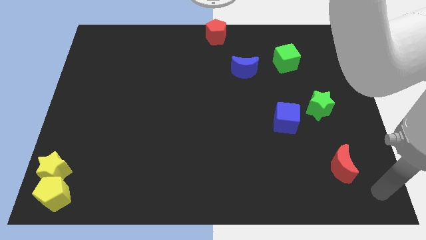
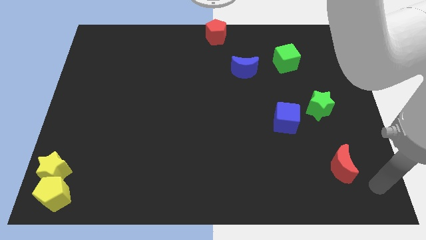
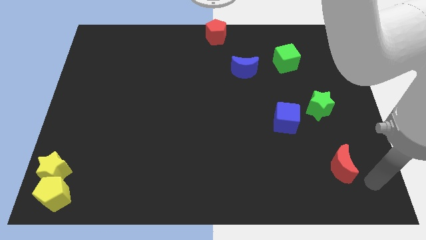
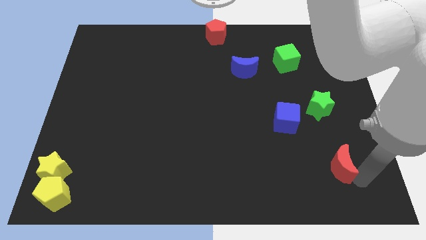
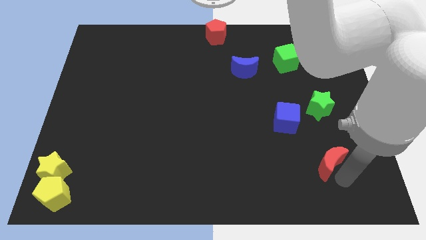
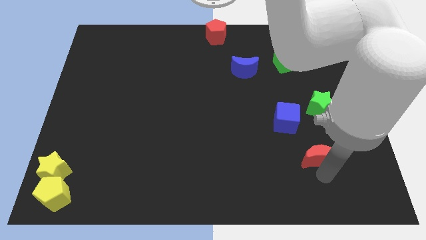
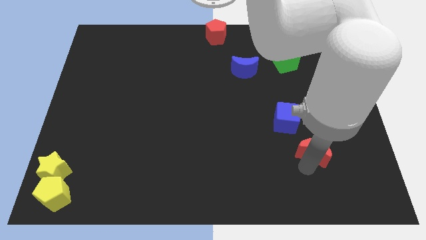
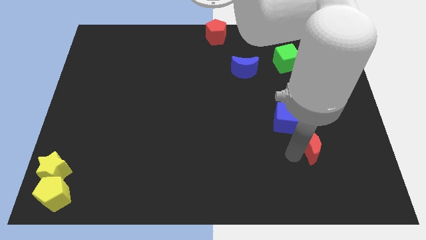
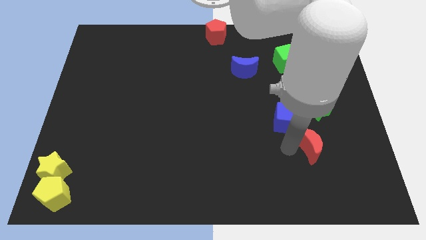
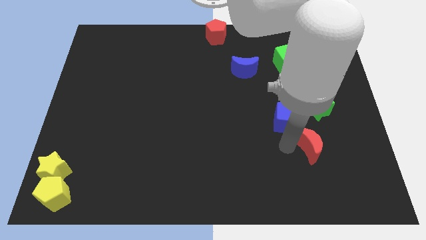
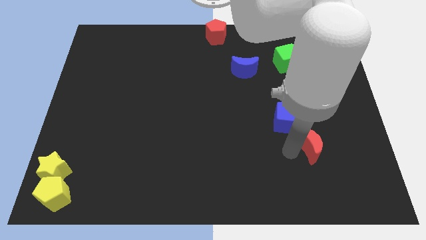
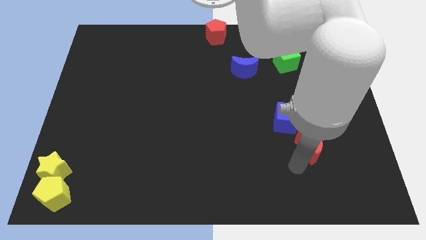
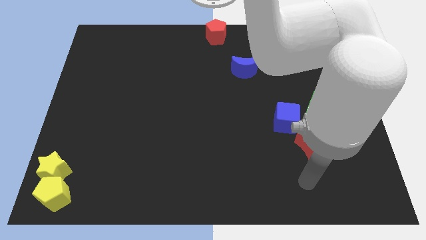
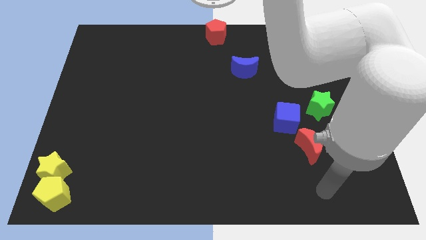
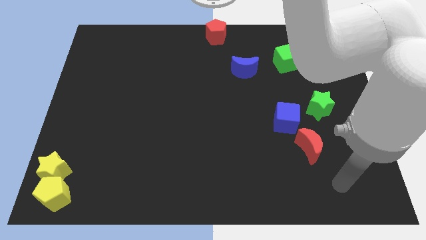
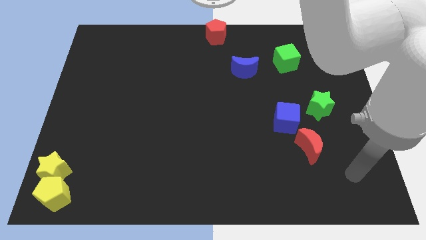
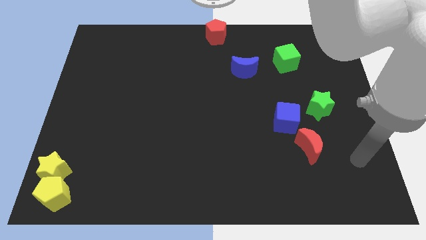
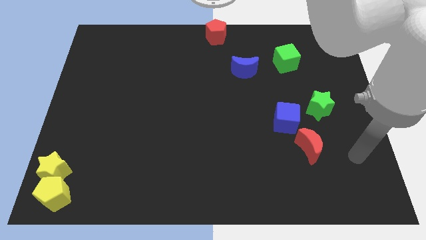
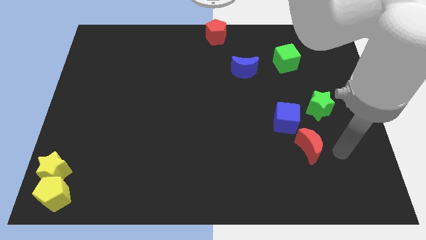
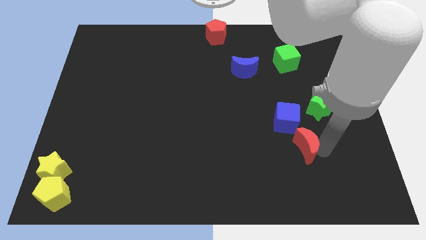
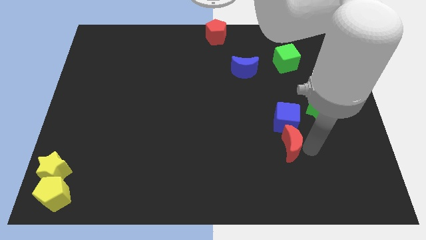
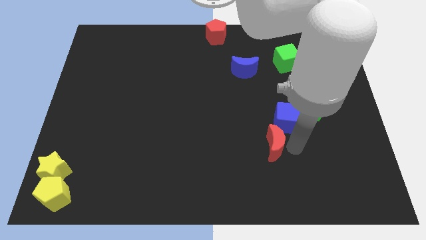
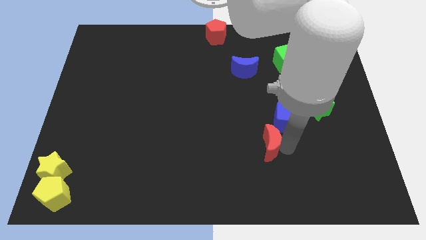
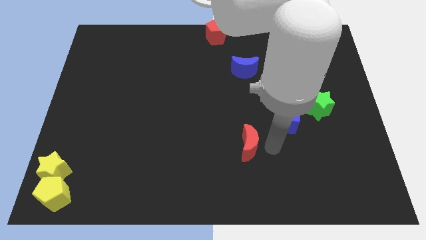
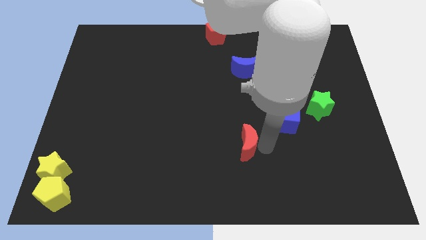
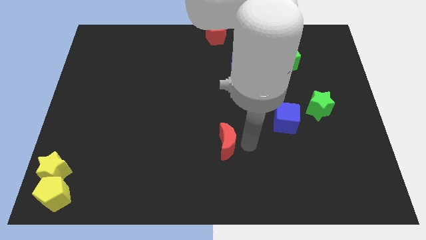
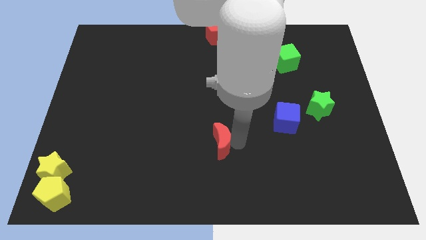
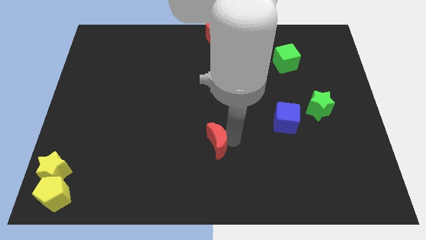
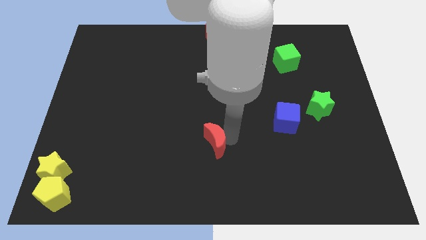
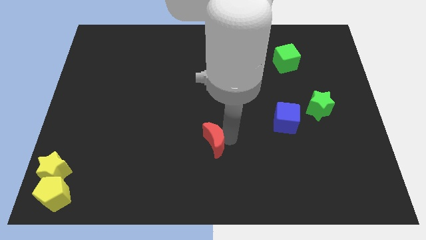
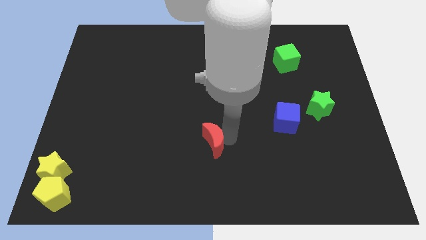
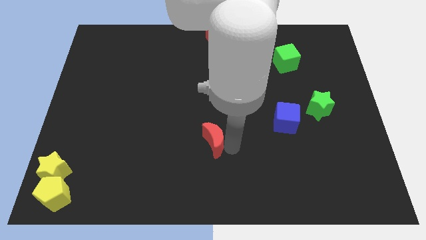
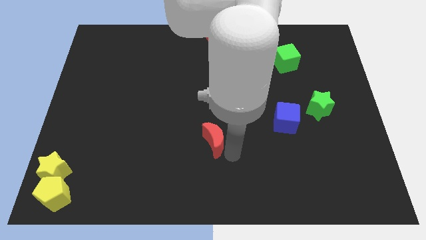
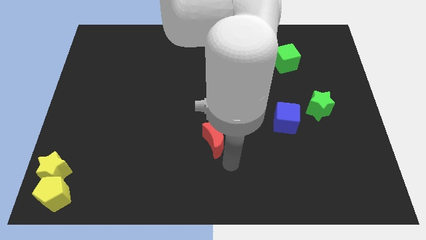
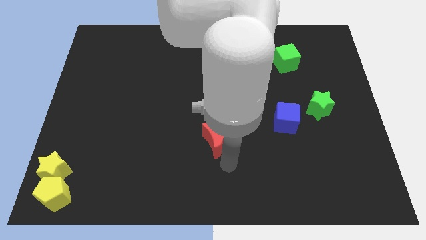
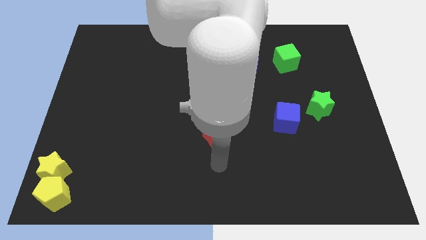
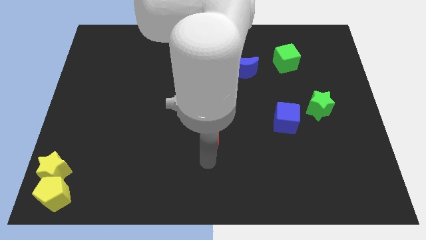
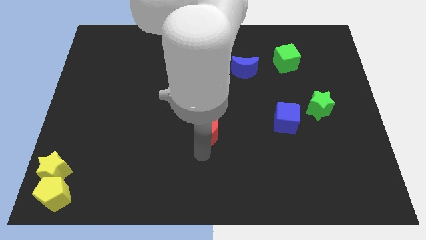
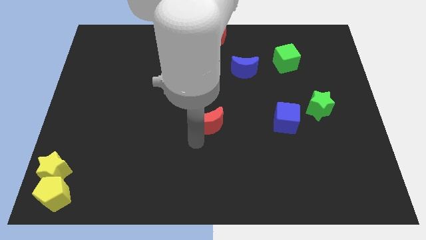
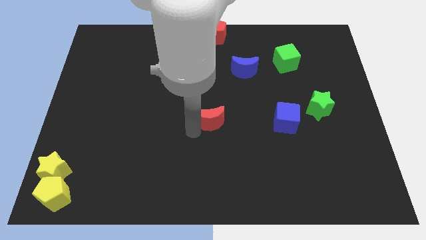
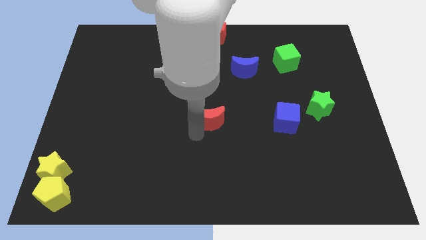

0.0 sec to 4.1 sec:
place the red crescent to the left of the blue cube

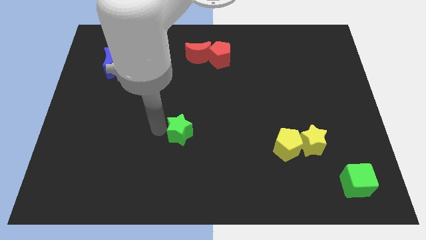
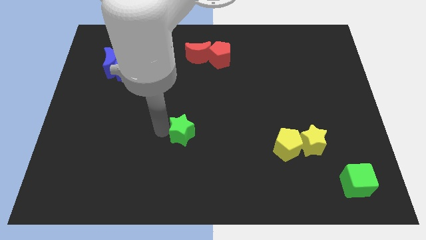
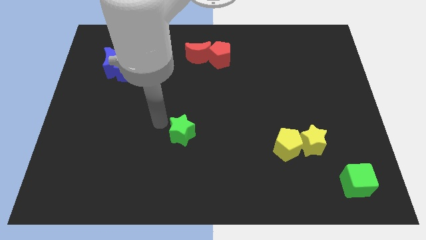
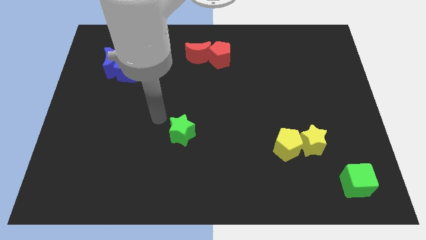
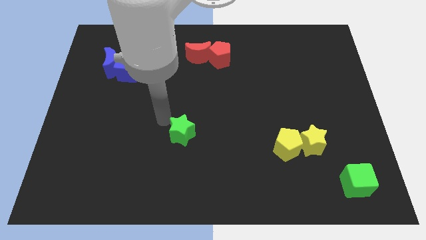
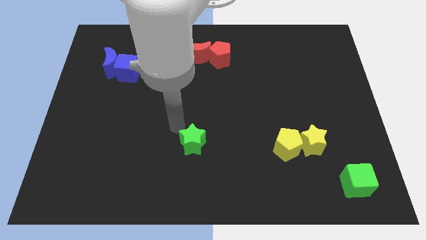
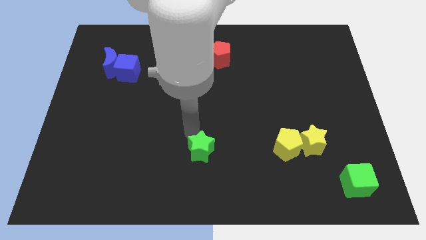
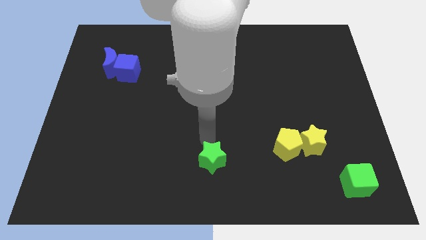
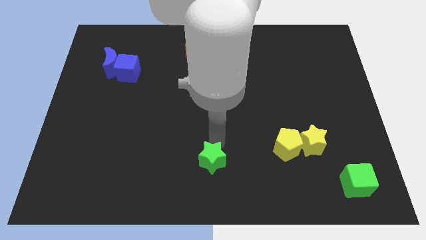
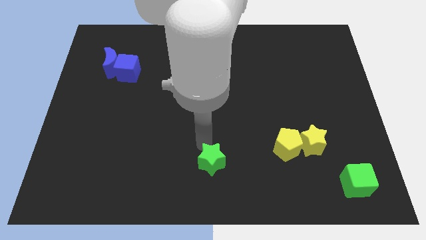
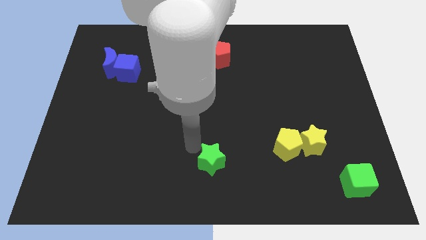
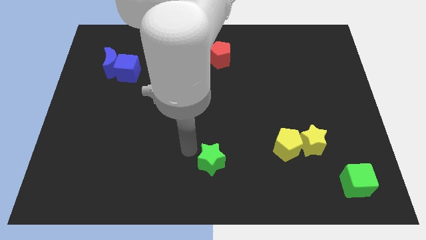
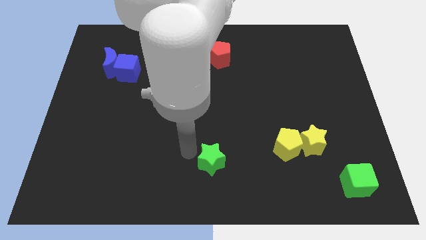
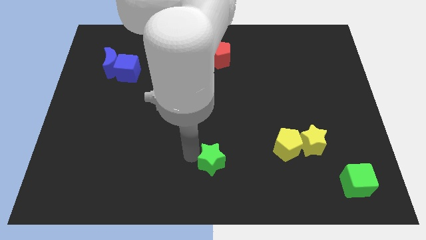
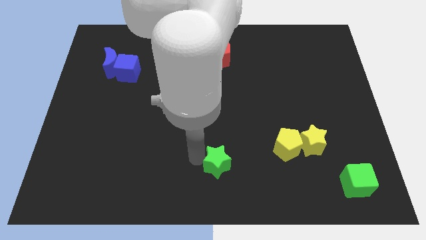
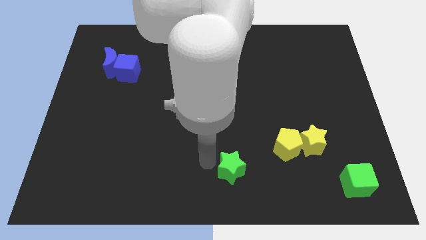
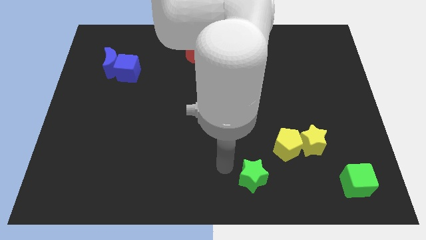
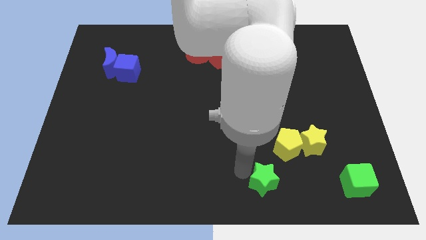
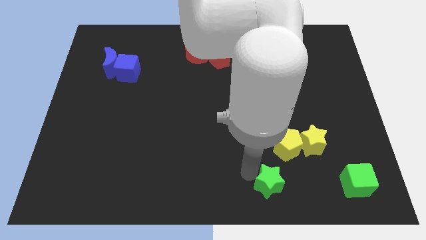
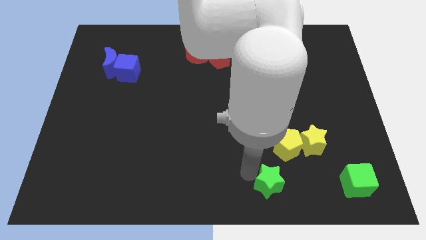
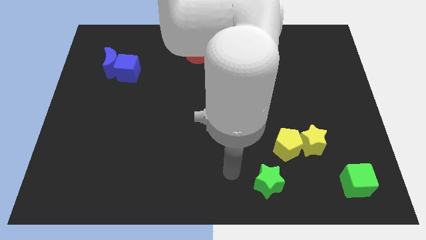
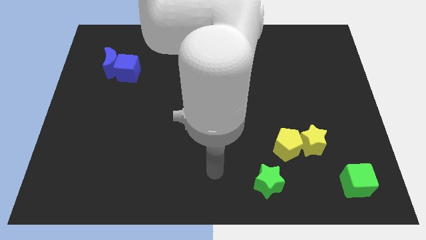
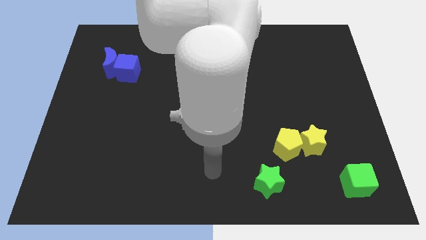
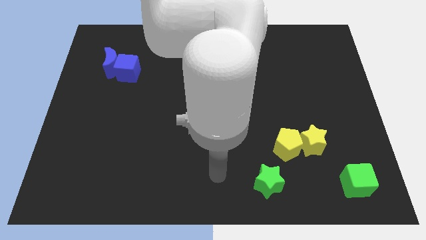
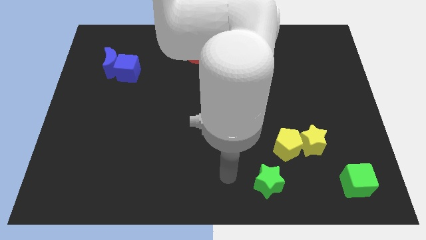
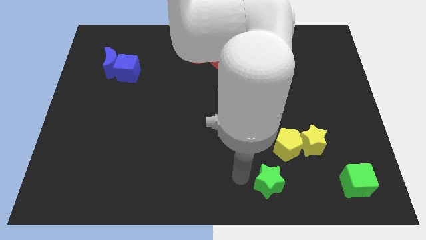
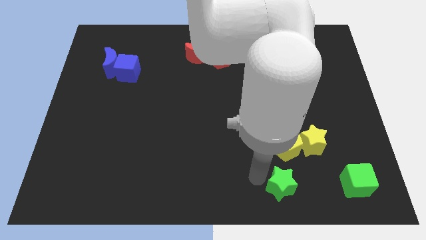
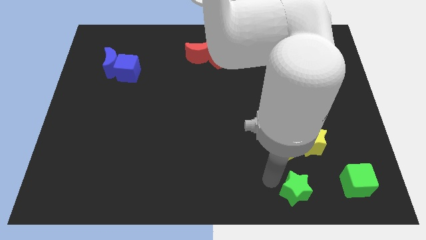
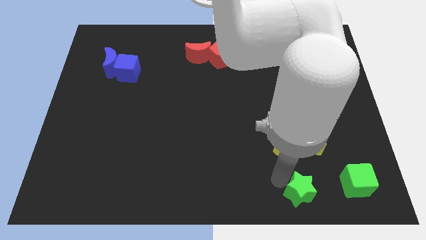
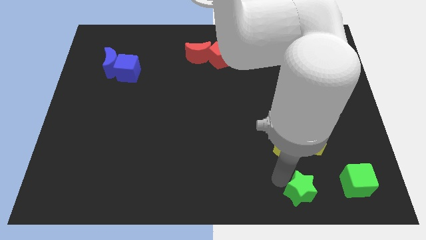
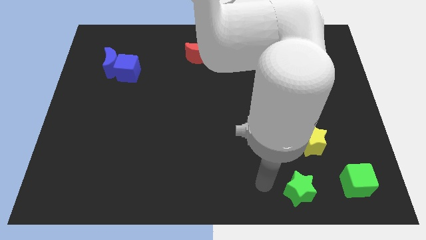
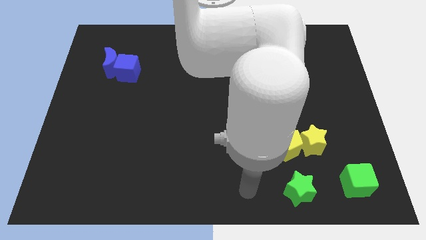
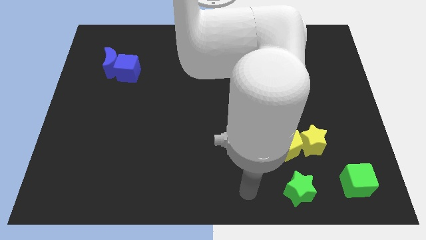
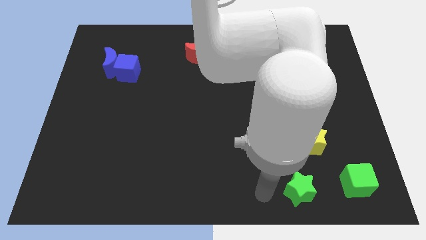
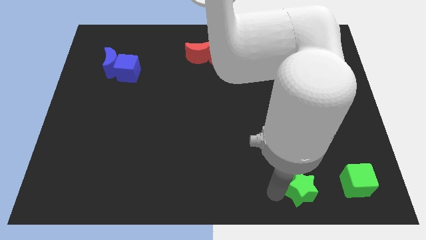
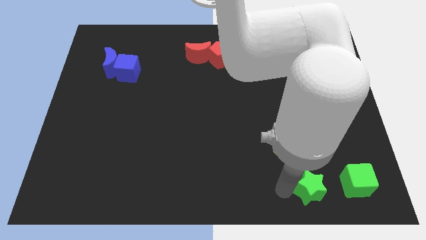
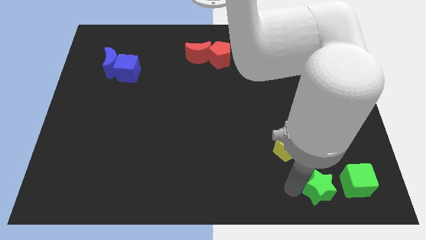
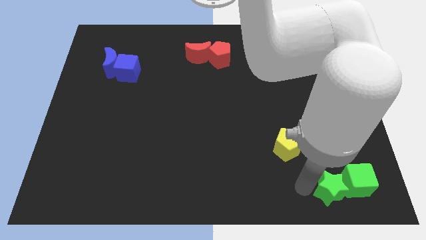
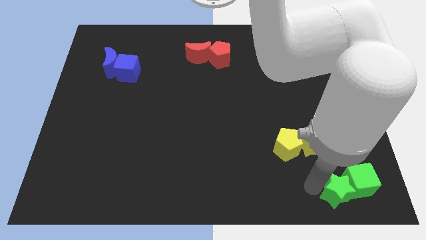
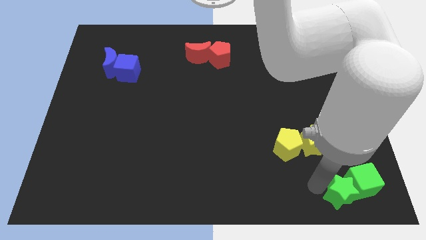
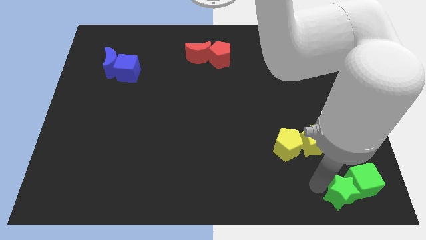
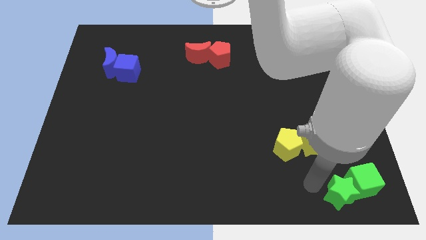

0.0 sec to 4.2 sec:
move green star to the bottom right corner of the board

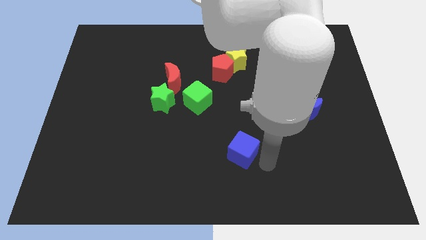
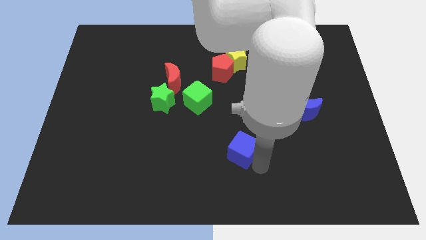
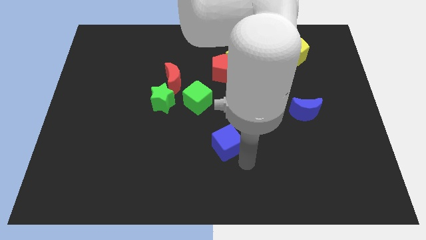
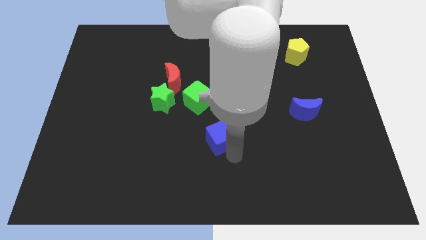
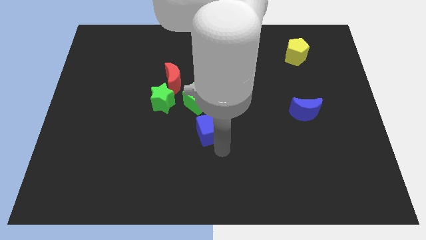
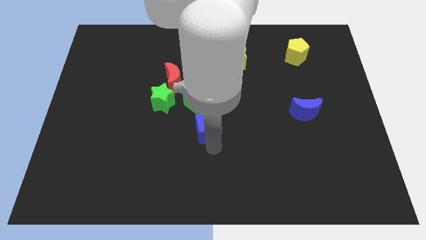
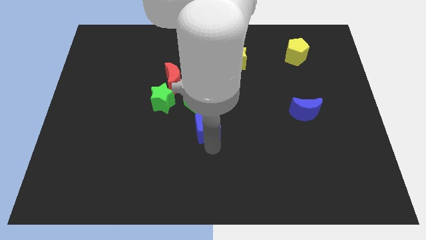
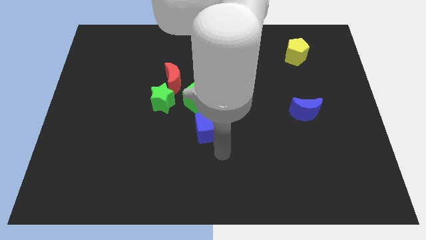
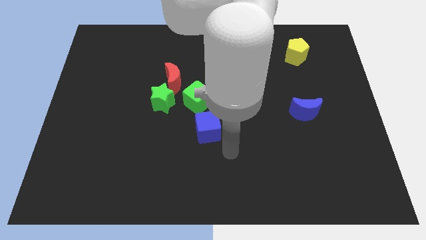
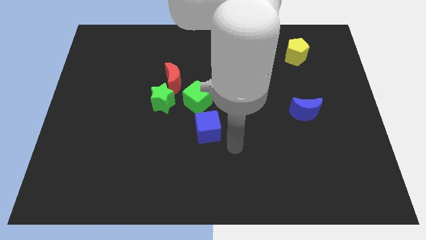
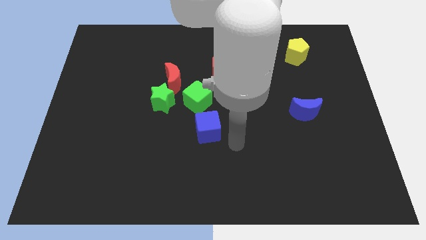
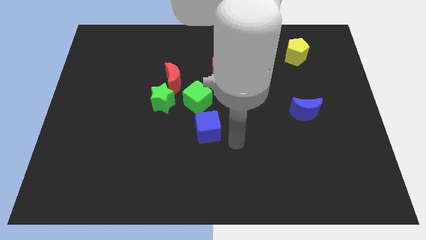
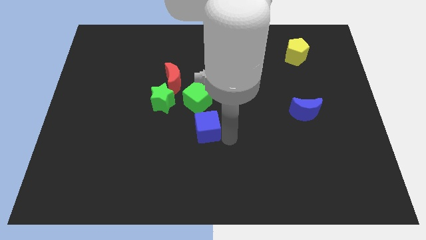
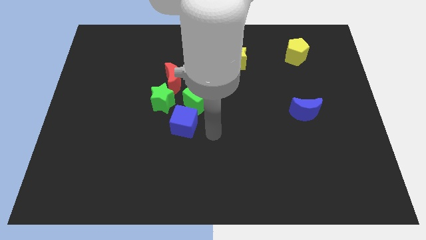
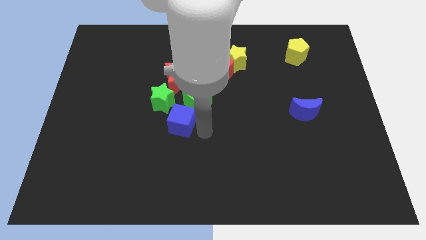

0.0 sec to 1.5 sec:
slightly move the blue cube towards the center of the board
